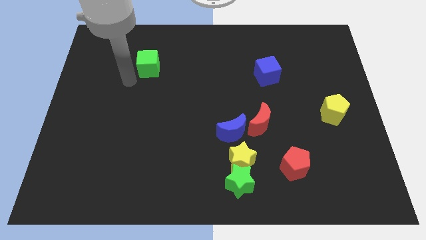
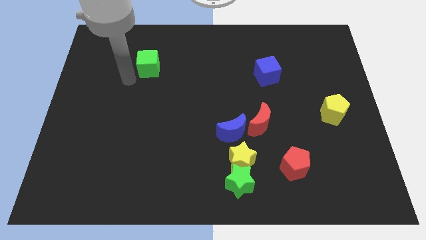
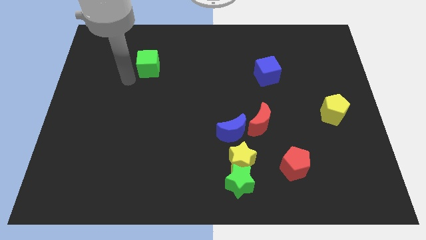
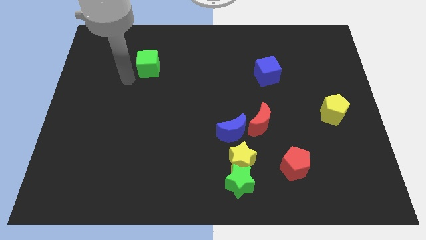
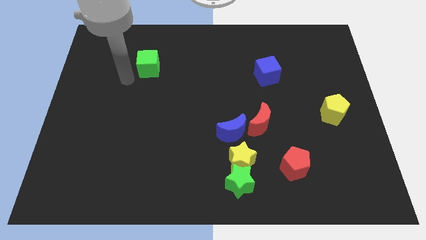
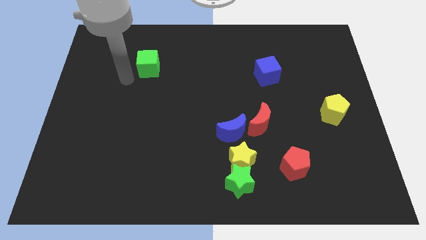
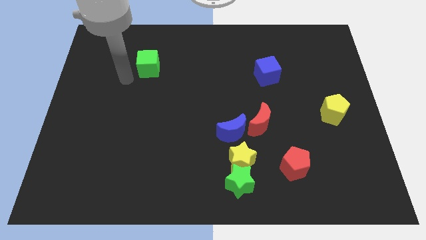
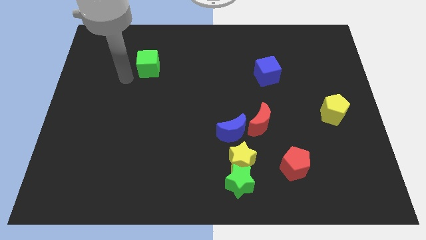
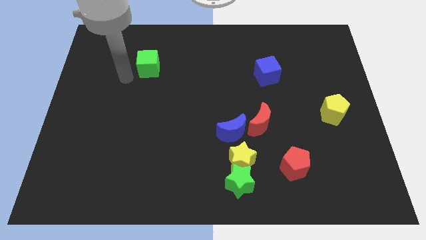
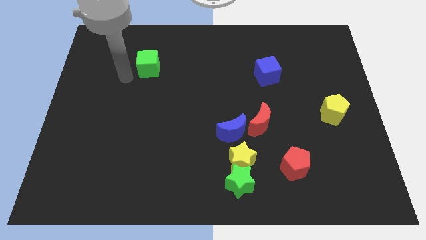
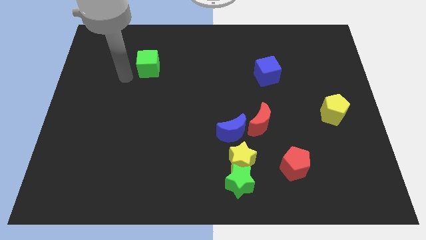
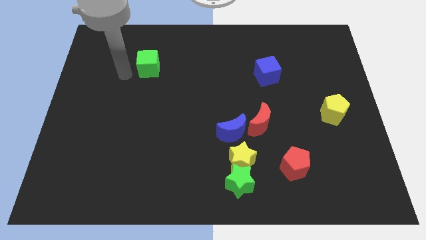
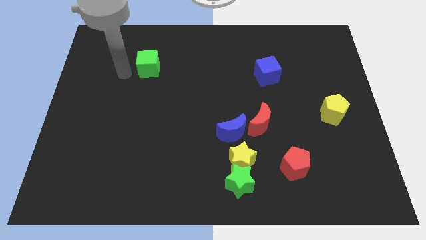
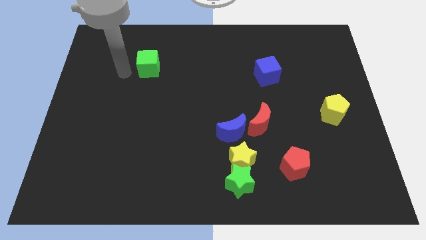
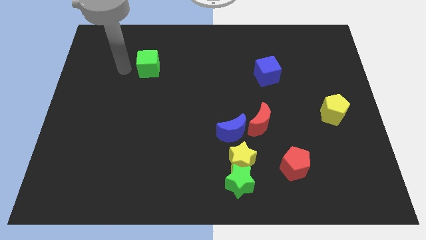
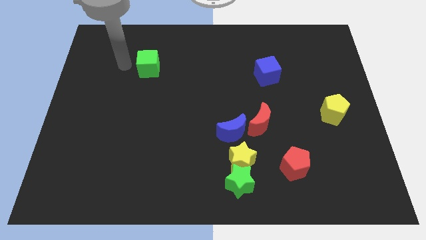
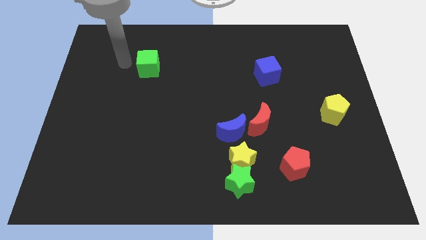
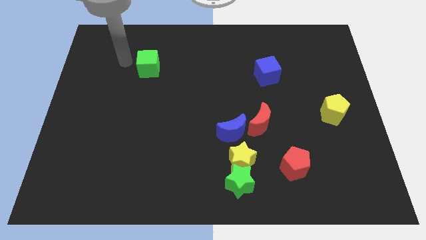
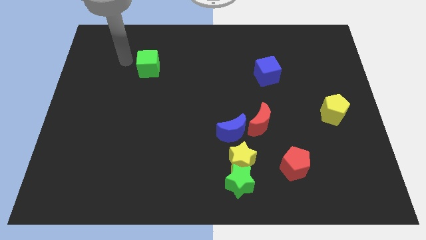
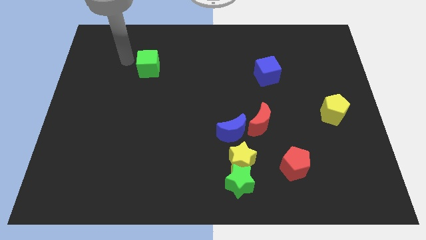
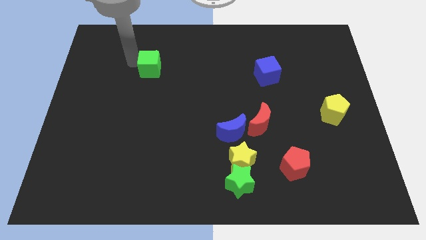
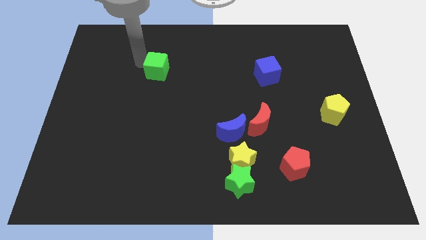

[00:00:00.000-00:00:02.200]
tap the green cube

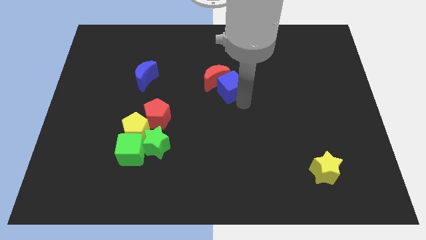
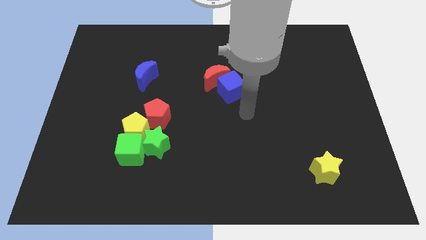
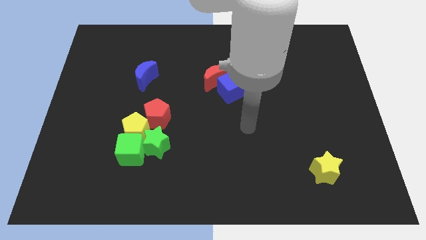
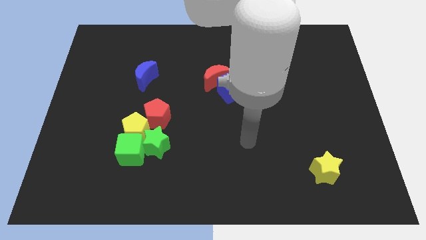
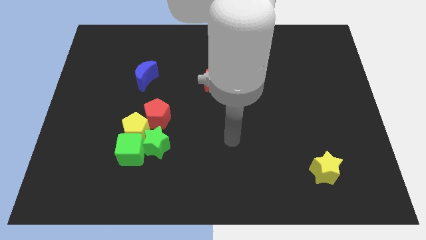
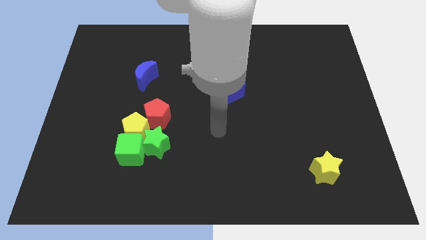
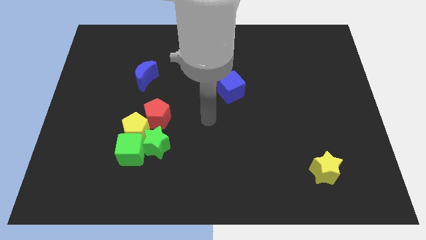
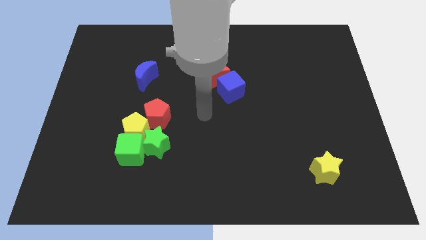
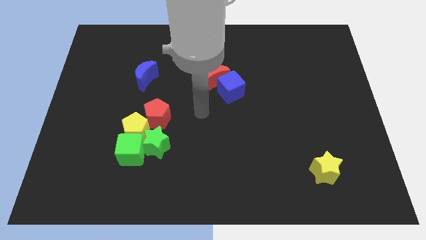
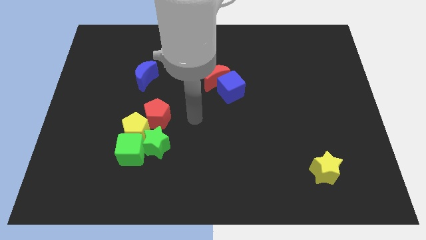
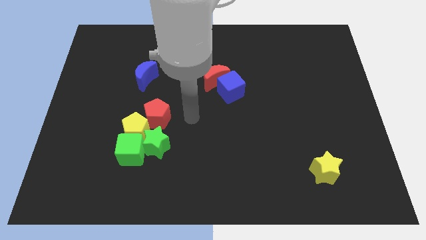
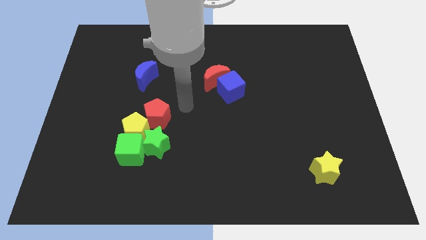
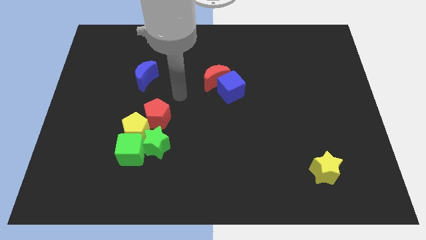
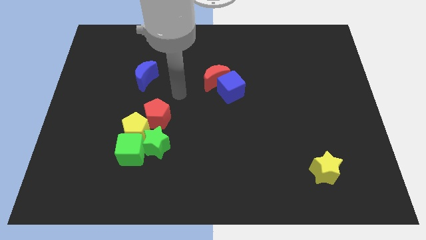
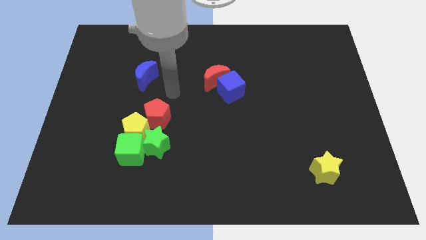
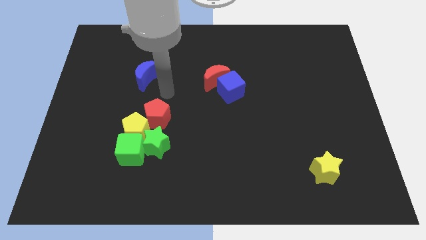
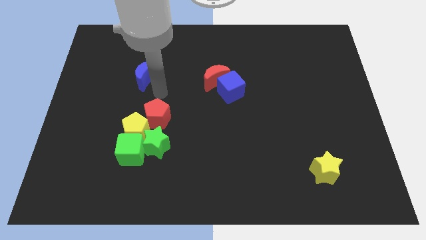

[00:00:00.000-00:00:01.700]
move your arm towards the blue crescent

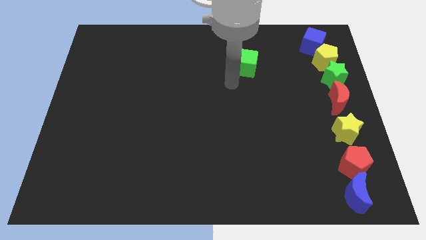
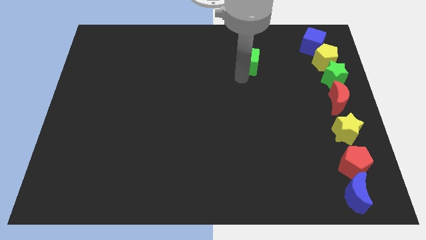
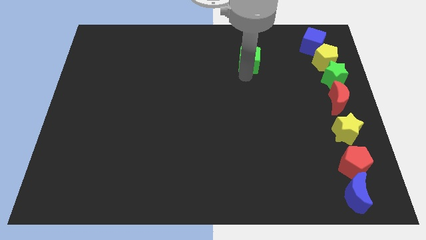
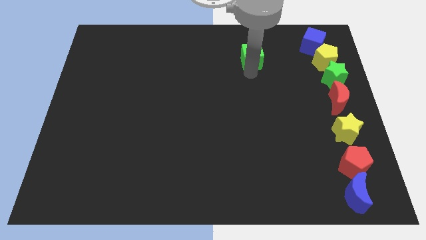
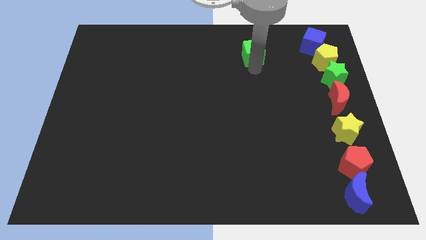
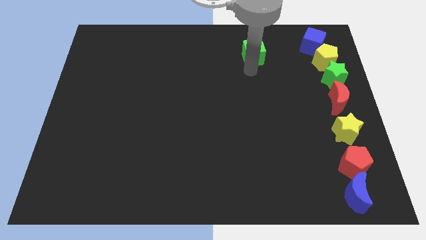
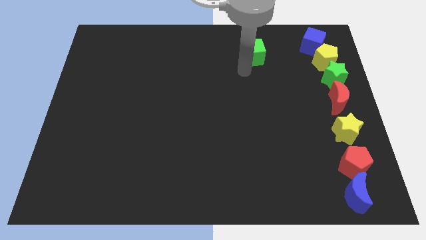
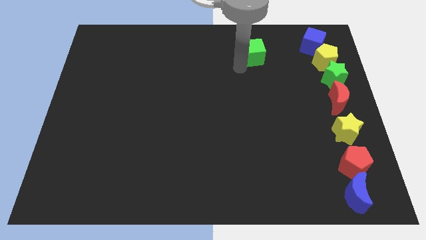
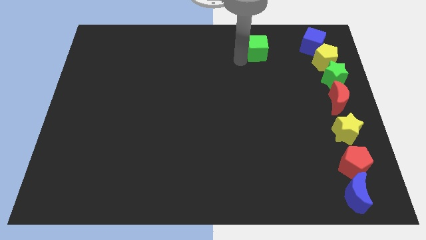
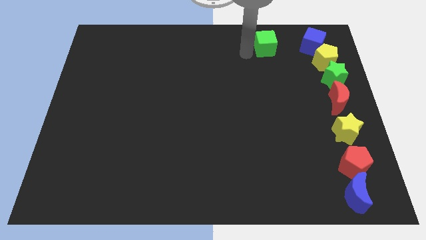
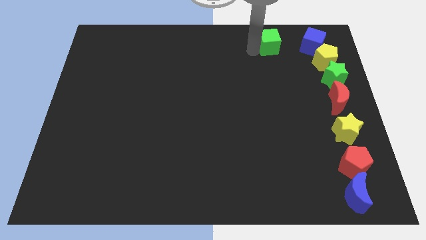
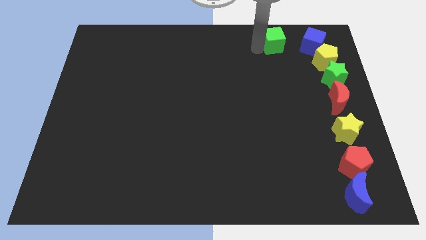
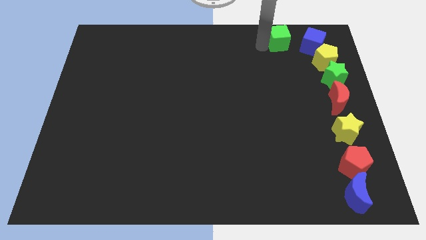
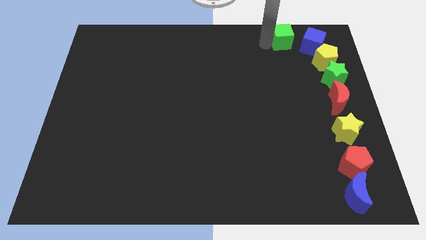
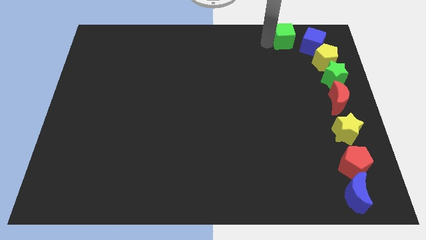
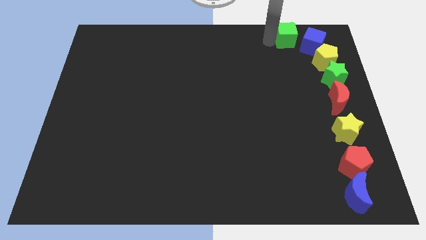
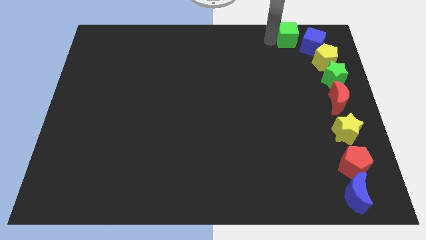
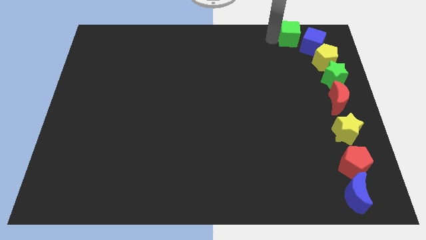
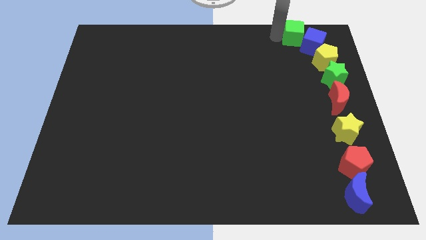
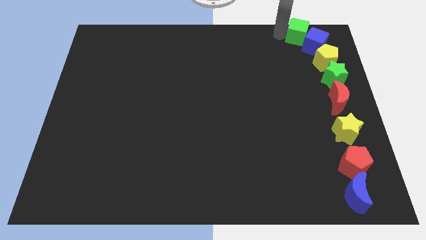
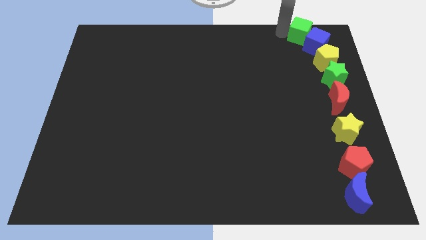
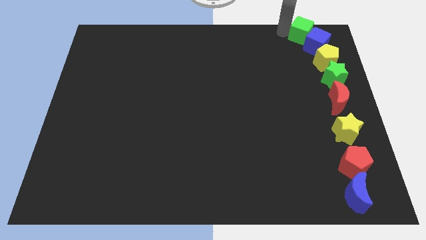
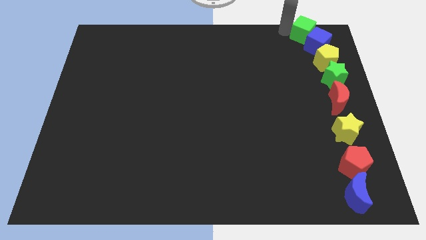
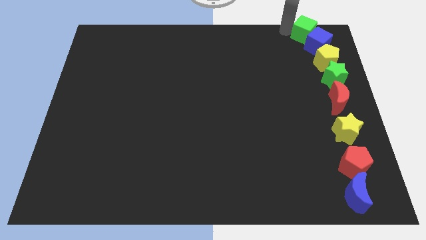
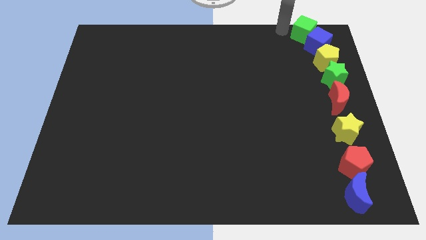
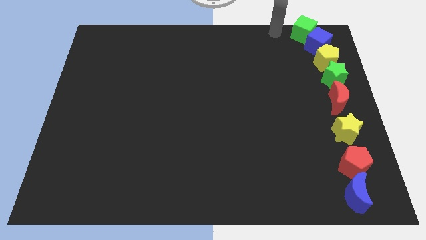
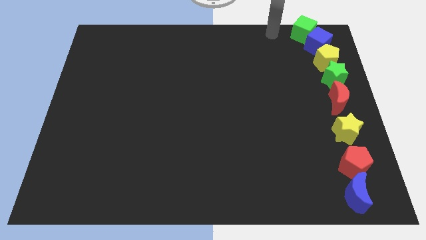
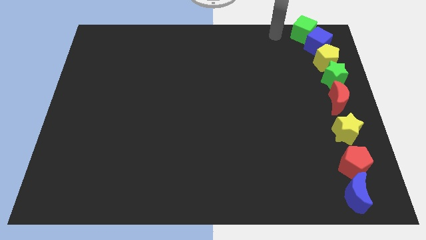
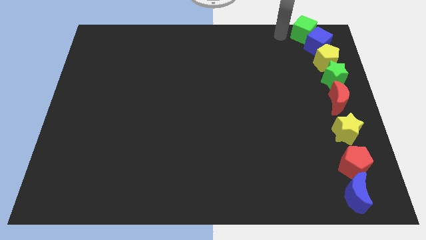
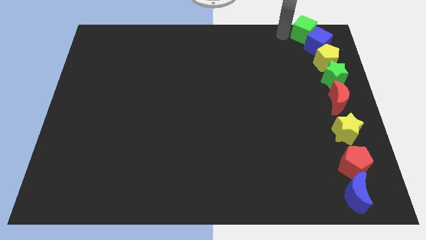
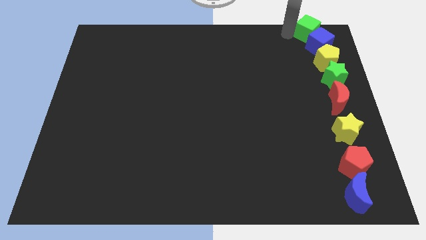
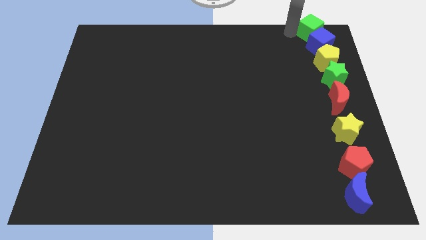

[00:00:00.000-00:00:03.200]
place green cube at the top of the blocks

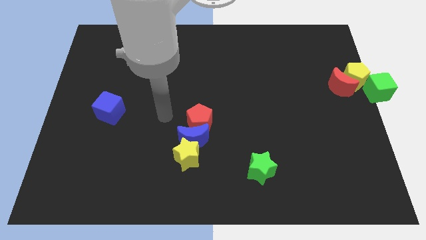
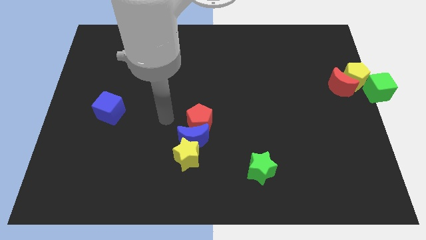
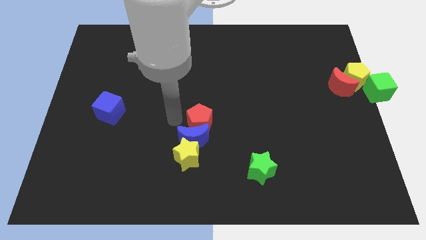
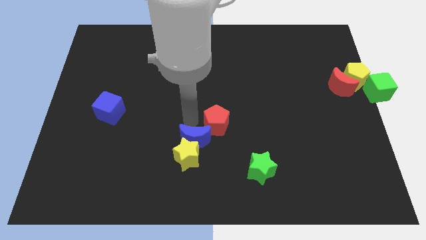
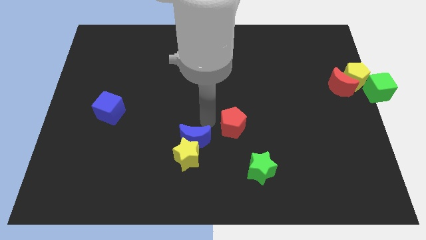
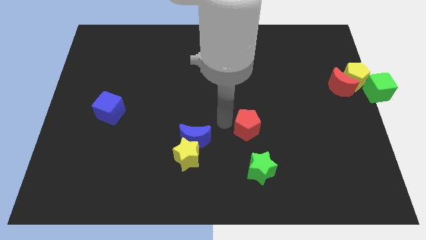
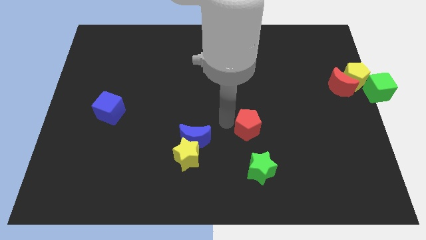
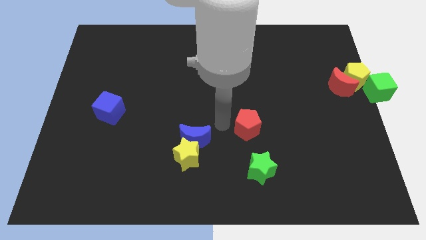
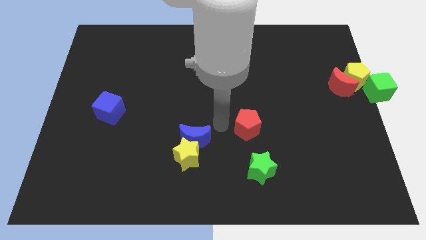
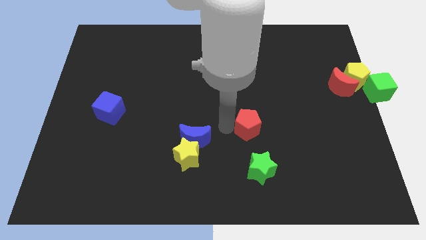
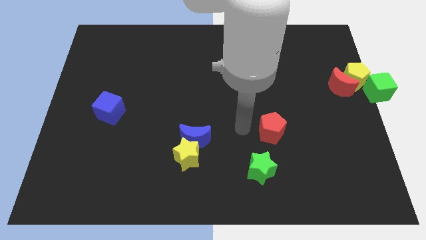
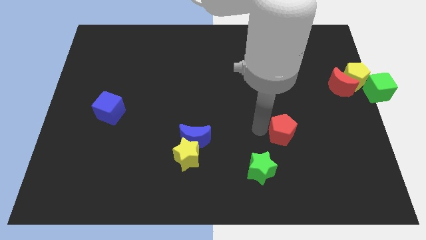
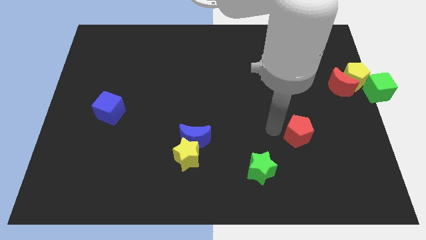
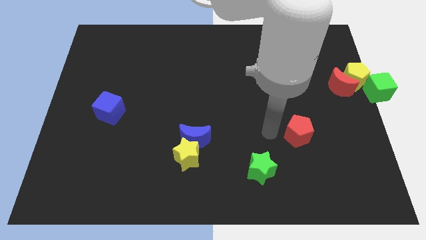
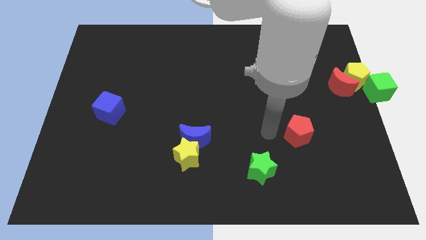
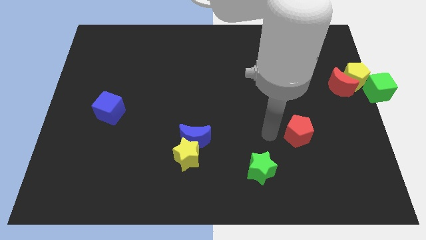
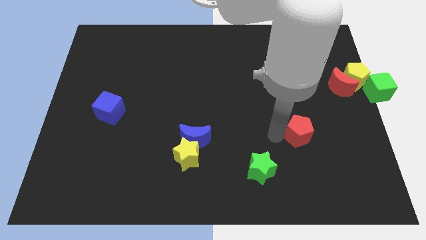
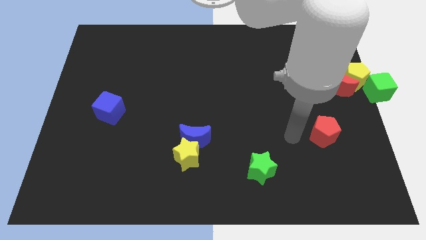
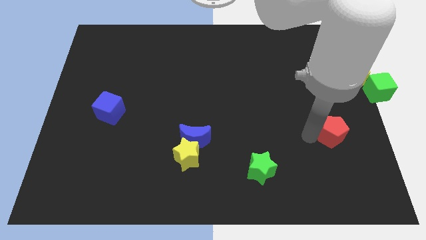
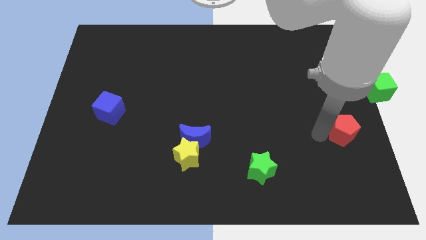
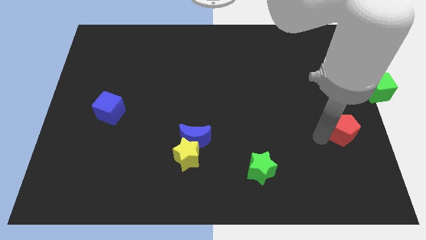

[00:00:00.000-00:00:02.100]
separate red pentagon from blue moon
